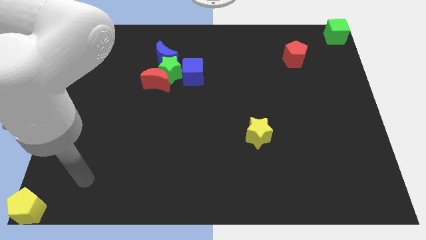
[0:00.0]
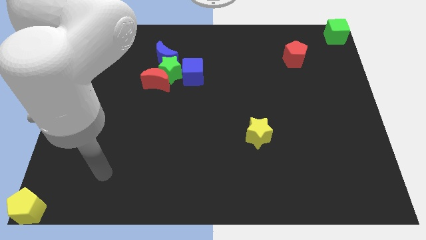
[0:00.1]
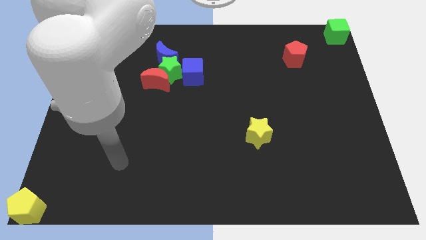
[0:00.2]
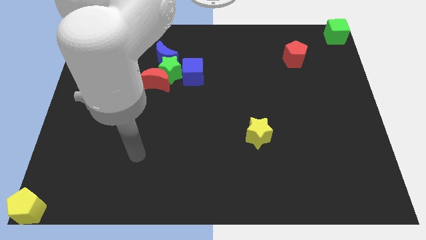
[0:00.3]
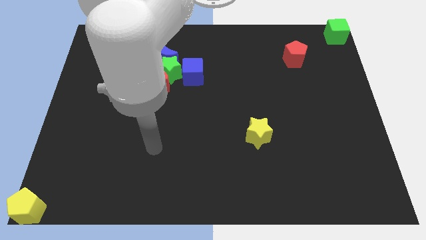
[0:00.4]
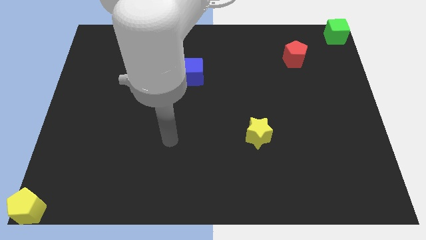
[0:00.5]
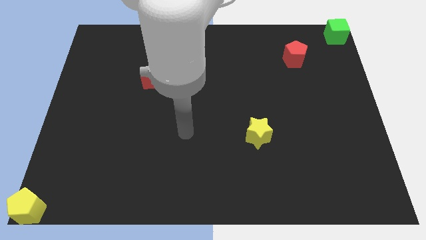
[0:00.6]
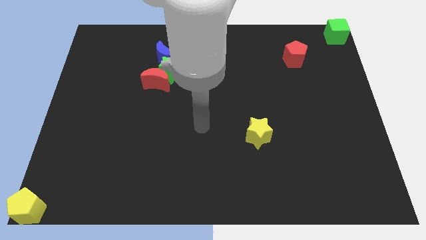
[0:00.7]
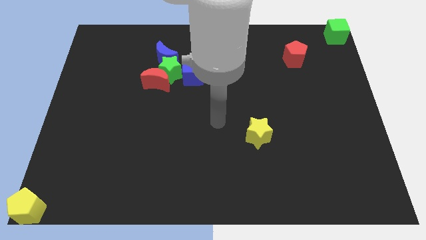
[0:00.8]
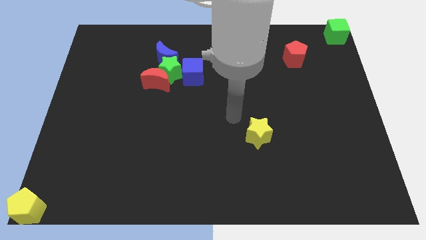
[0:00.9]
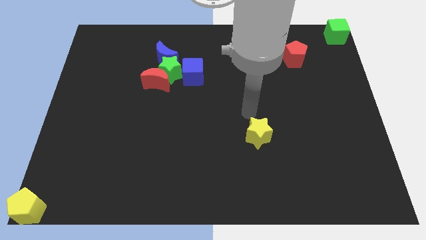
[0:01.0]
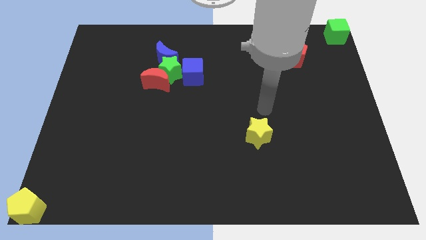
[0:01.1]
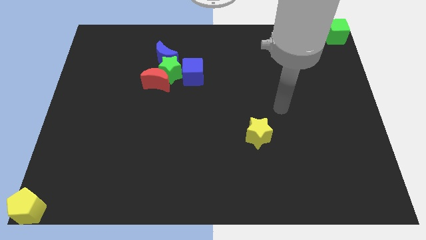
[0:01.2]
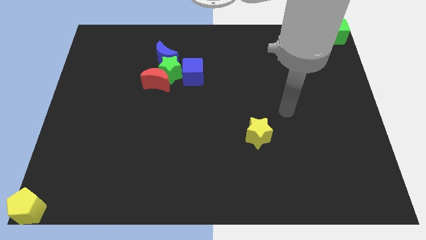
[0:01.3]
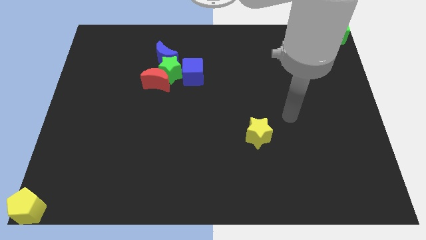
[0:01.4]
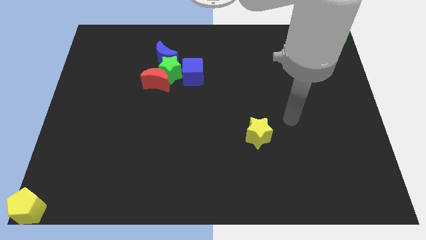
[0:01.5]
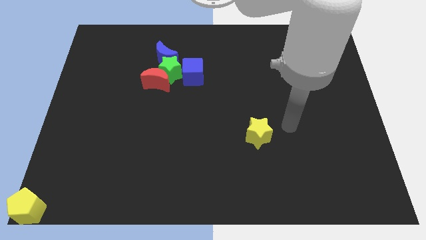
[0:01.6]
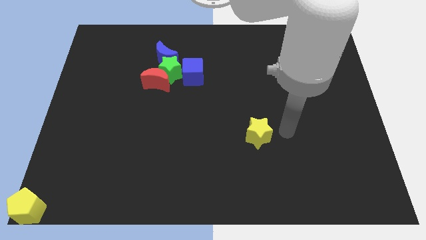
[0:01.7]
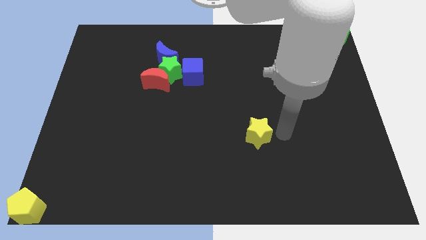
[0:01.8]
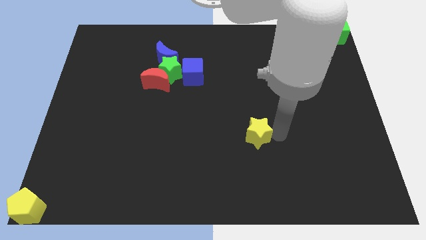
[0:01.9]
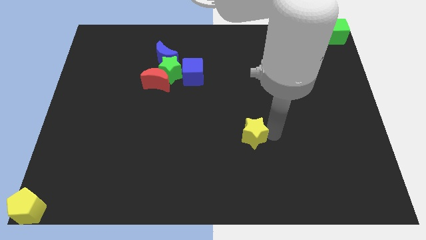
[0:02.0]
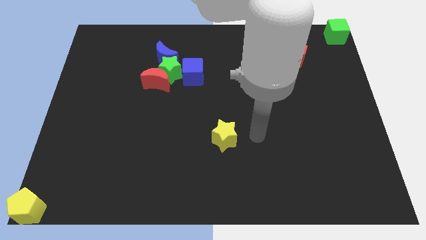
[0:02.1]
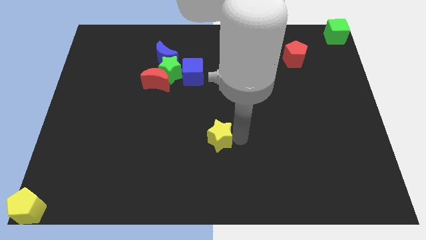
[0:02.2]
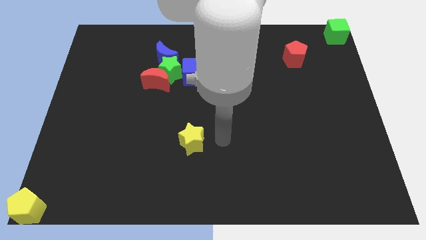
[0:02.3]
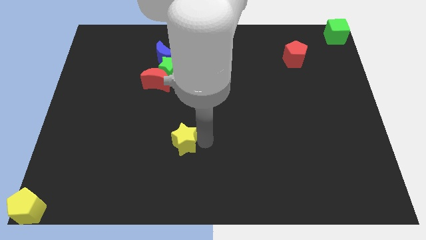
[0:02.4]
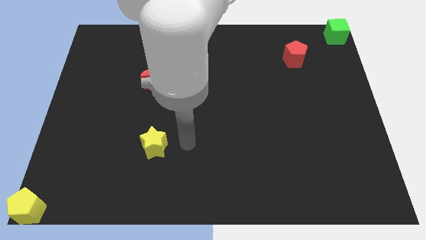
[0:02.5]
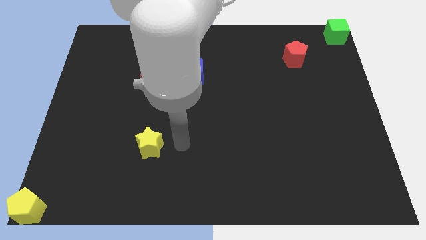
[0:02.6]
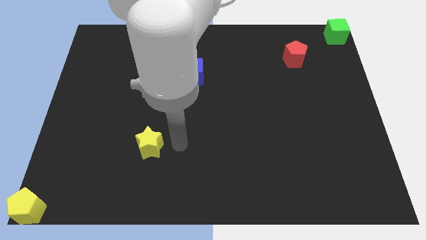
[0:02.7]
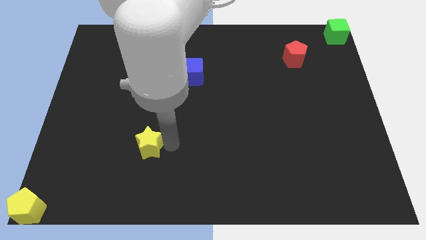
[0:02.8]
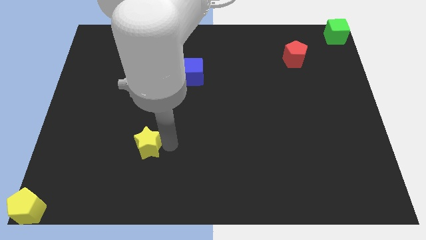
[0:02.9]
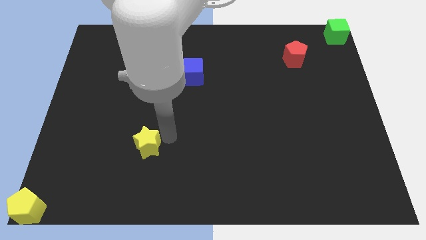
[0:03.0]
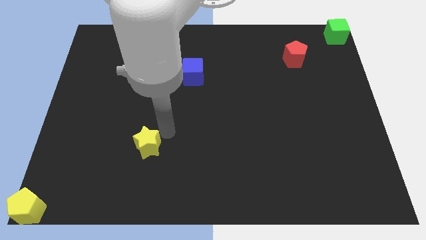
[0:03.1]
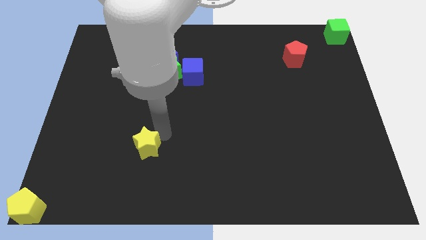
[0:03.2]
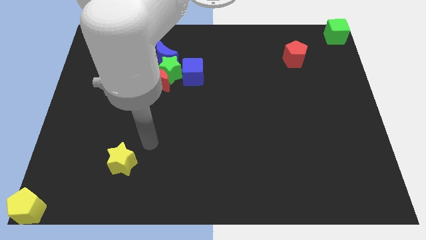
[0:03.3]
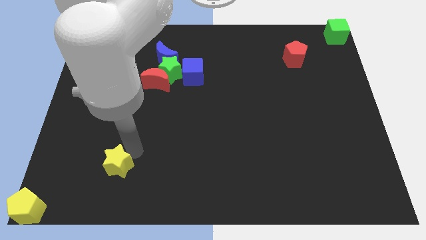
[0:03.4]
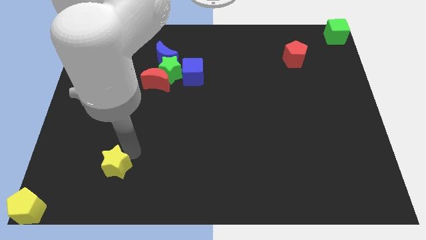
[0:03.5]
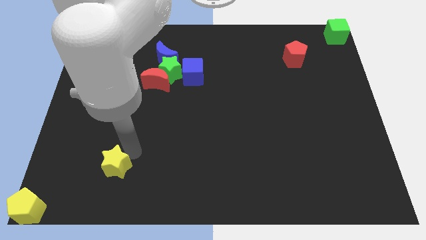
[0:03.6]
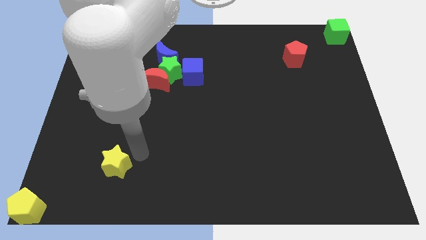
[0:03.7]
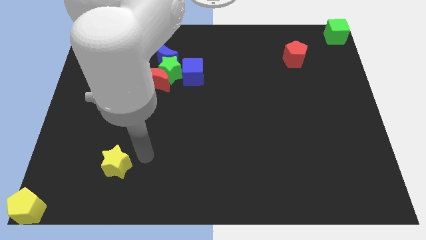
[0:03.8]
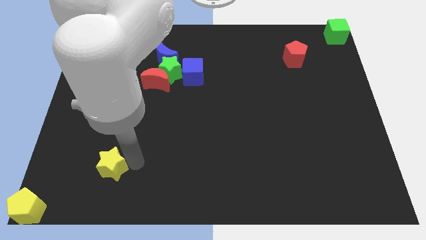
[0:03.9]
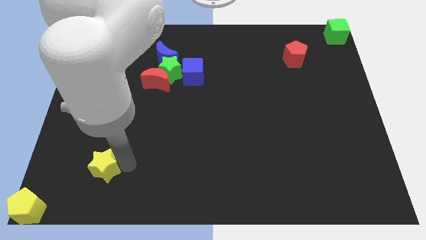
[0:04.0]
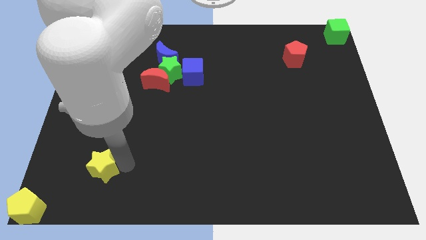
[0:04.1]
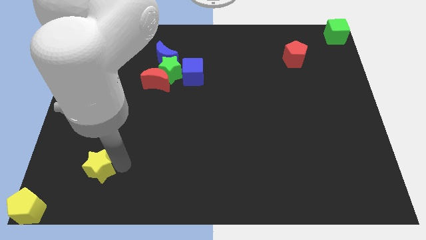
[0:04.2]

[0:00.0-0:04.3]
push the yellow star towards the left side of the board

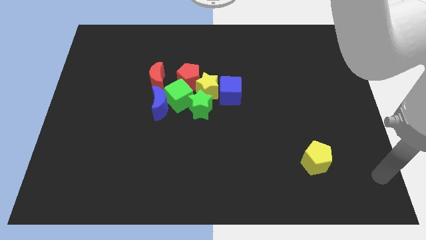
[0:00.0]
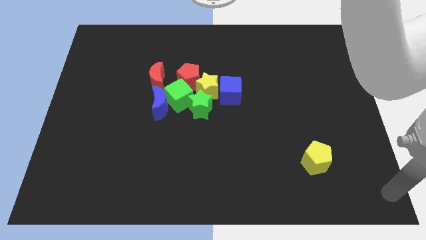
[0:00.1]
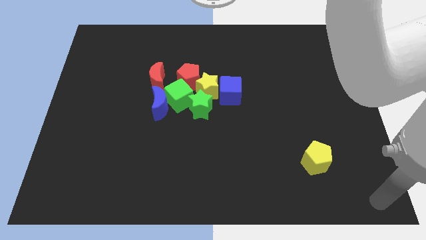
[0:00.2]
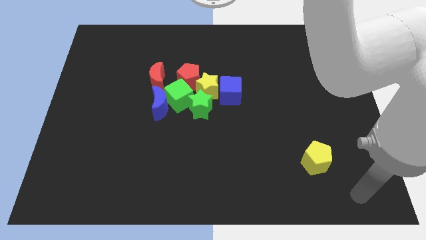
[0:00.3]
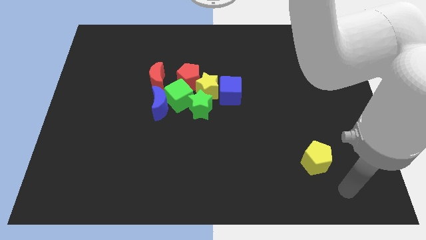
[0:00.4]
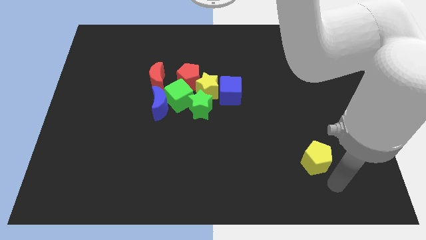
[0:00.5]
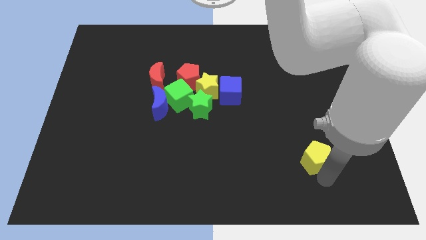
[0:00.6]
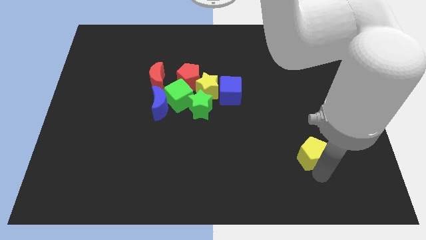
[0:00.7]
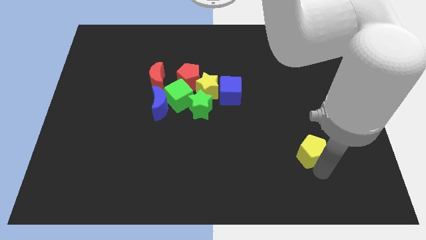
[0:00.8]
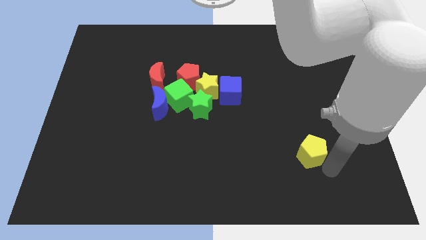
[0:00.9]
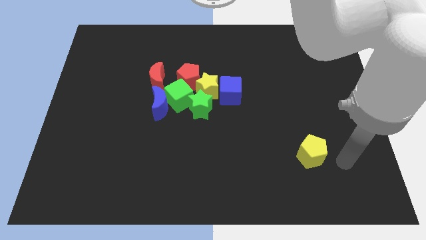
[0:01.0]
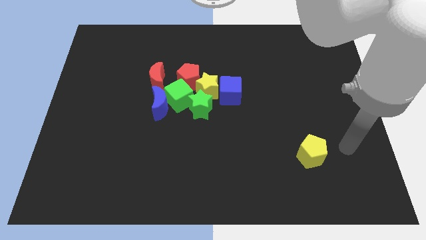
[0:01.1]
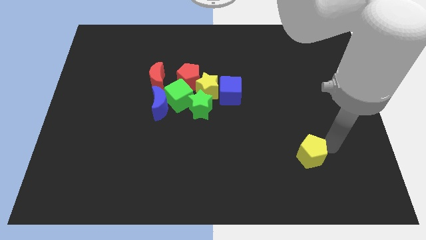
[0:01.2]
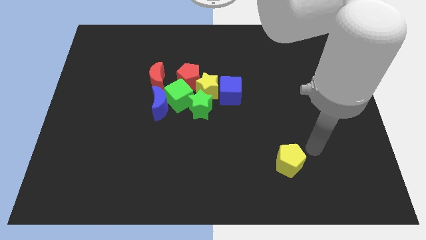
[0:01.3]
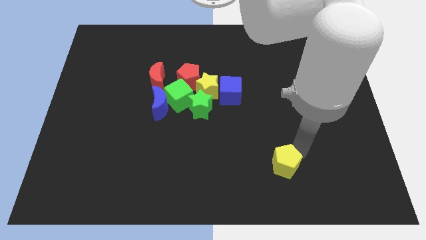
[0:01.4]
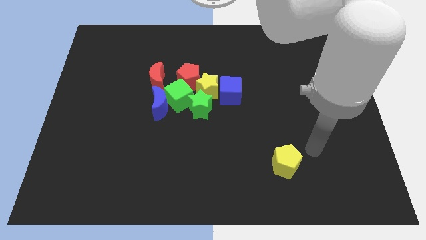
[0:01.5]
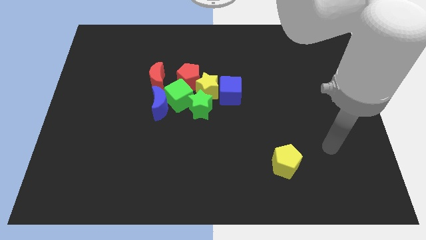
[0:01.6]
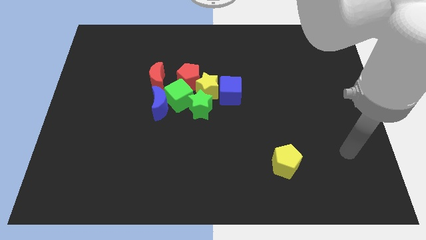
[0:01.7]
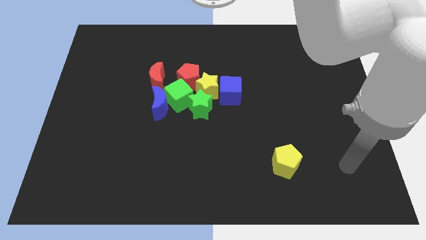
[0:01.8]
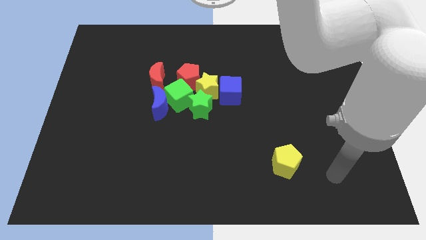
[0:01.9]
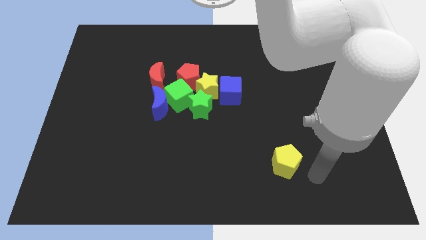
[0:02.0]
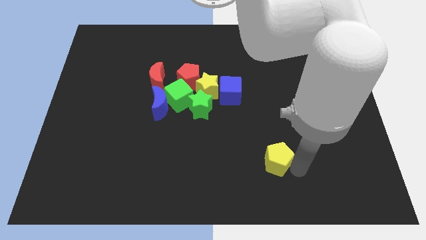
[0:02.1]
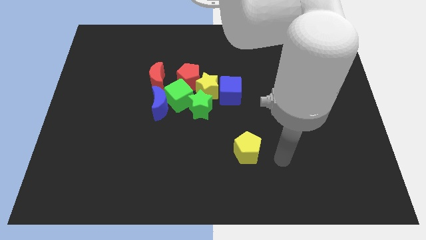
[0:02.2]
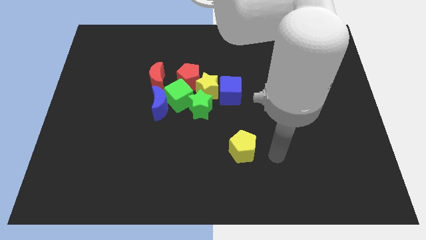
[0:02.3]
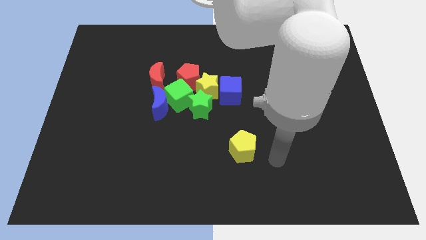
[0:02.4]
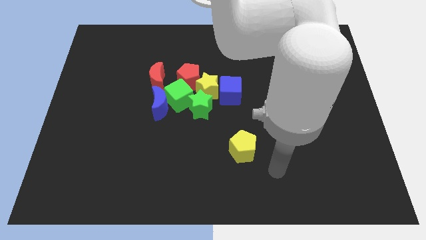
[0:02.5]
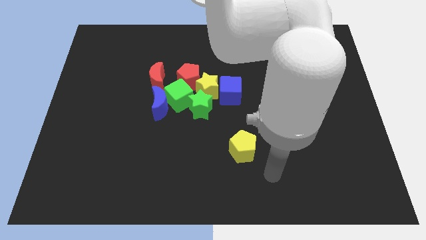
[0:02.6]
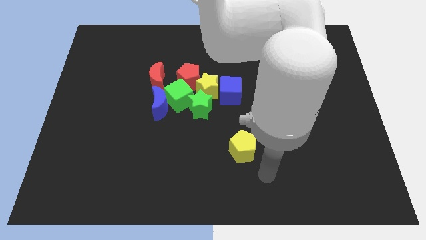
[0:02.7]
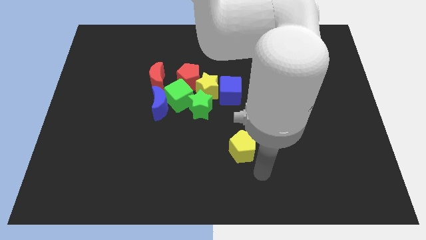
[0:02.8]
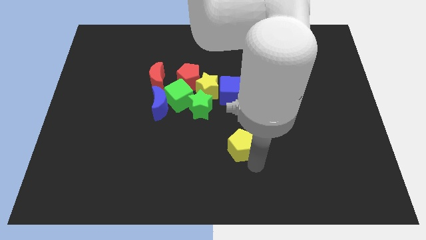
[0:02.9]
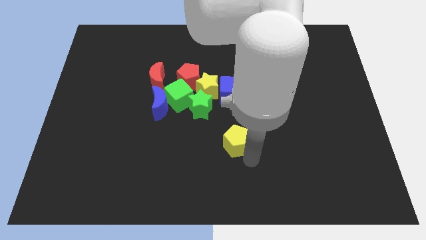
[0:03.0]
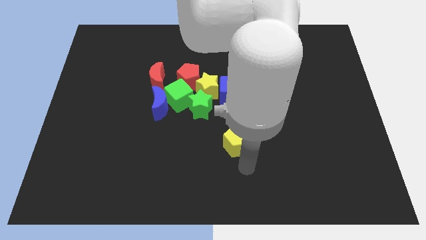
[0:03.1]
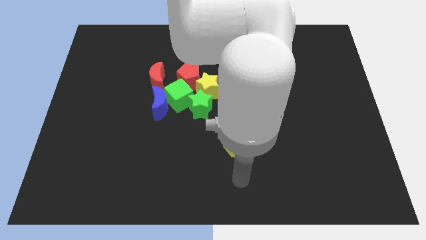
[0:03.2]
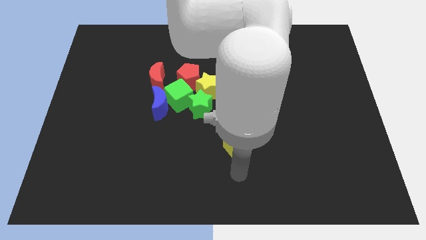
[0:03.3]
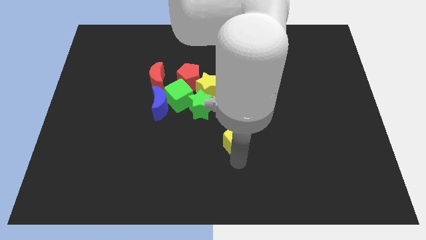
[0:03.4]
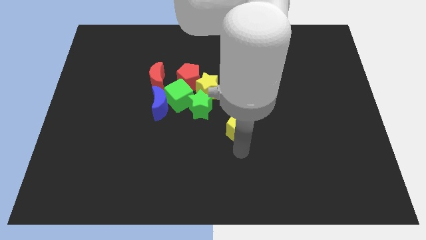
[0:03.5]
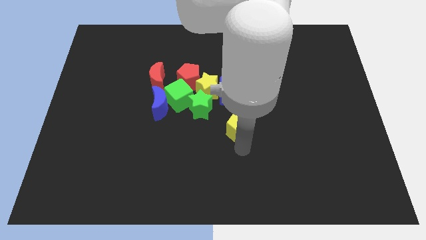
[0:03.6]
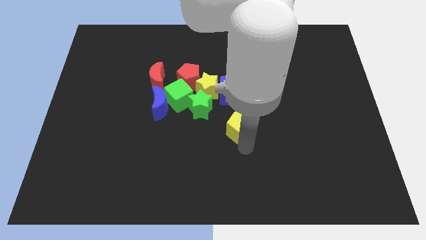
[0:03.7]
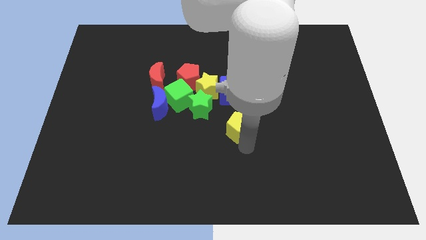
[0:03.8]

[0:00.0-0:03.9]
move the yellow pentagon towards the bottom side of the blue cube

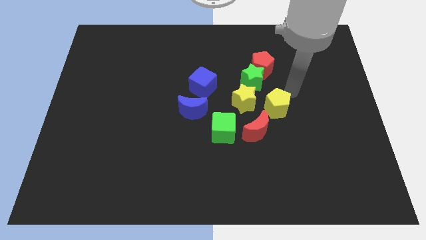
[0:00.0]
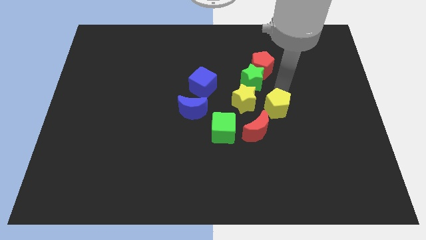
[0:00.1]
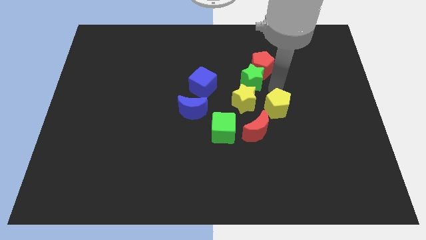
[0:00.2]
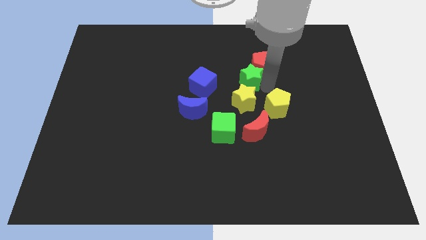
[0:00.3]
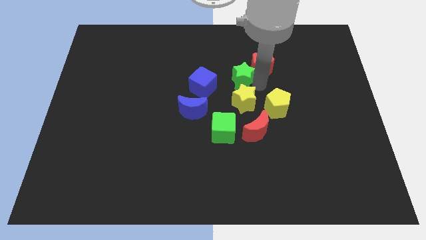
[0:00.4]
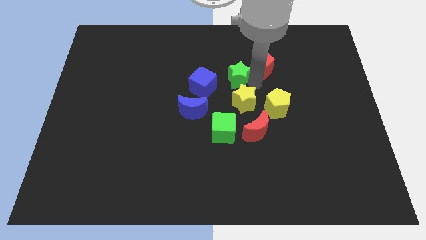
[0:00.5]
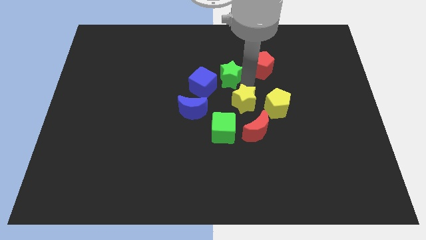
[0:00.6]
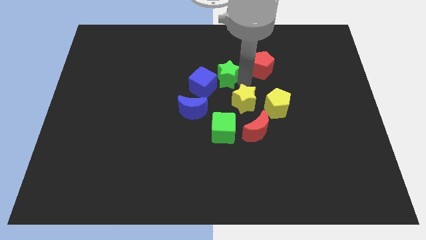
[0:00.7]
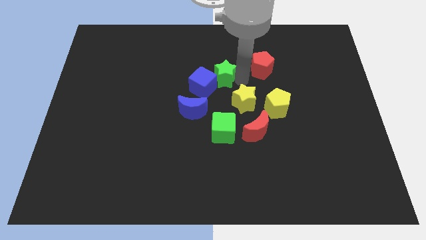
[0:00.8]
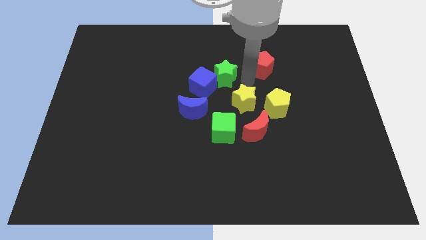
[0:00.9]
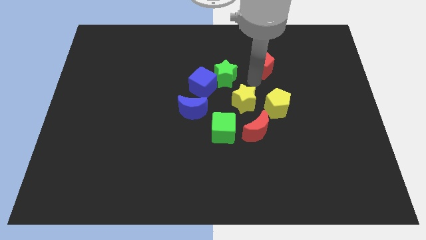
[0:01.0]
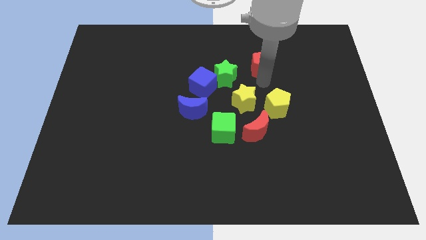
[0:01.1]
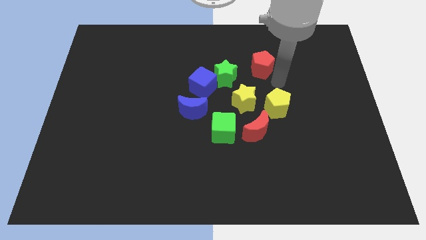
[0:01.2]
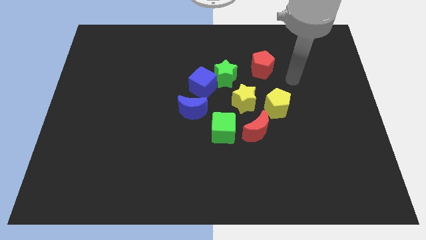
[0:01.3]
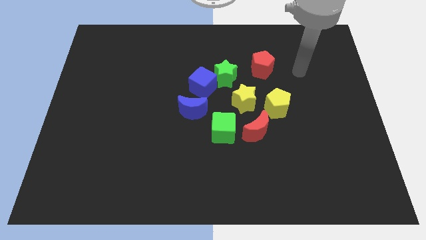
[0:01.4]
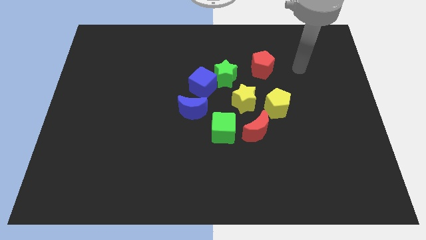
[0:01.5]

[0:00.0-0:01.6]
move the green star above the blue cube
